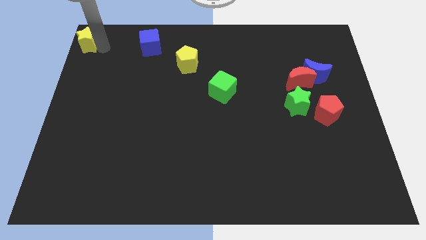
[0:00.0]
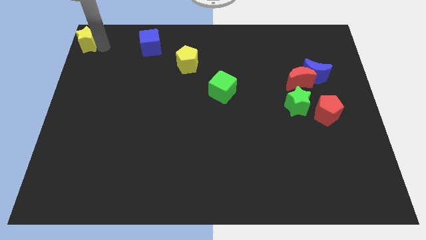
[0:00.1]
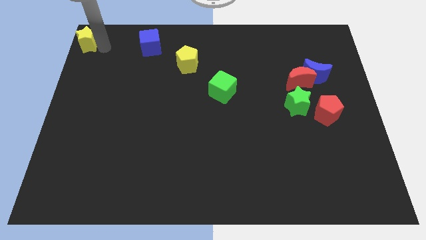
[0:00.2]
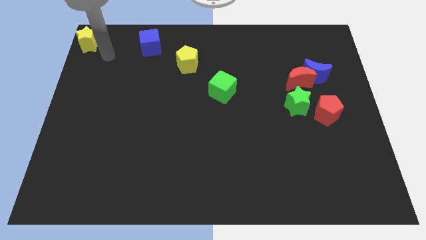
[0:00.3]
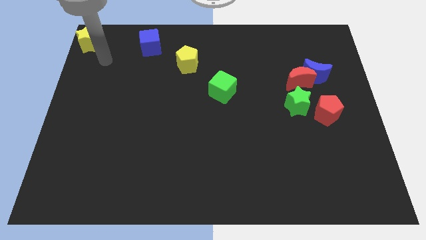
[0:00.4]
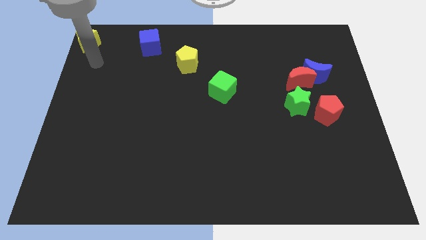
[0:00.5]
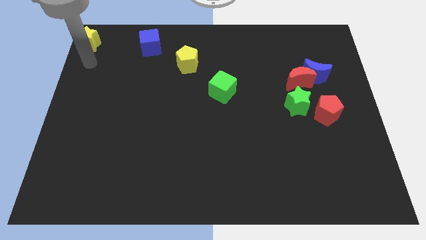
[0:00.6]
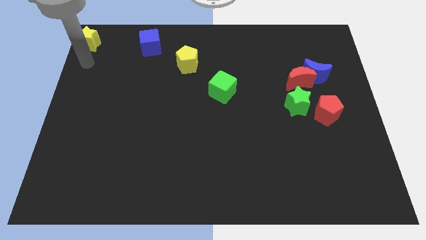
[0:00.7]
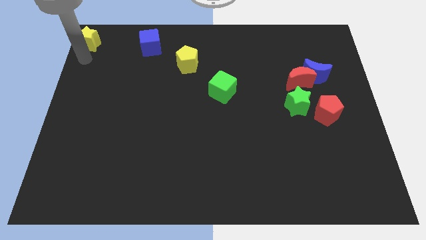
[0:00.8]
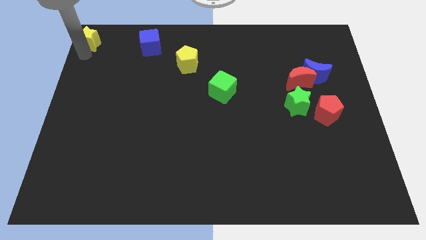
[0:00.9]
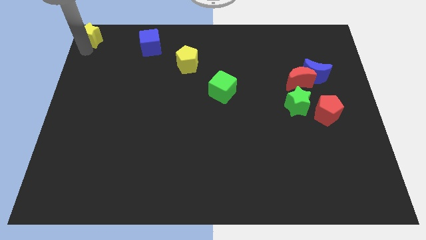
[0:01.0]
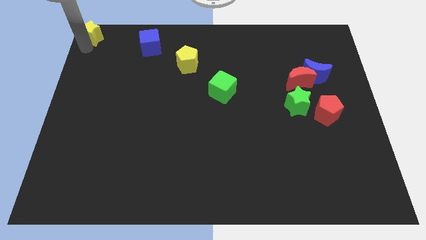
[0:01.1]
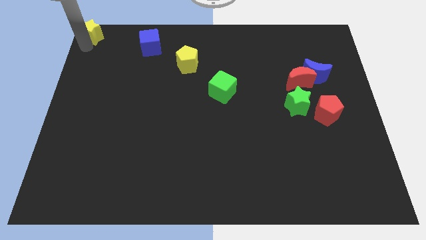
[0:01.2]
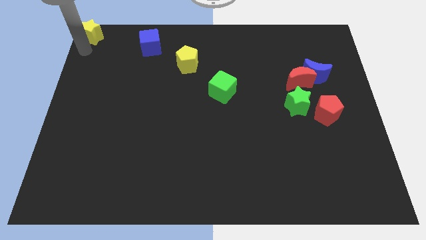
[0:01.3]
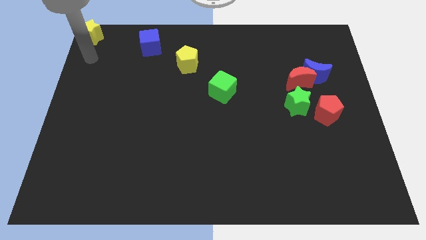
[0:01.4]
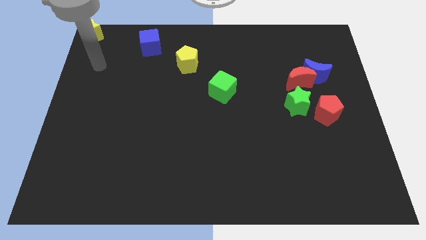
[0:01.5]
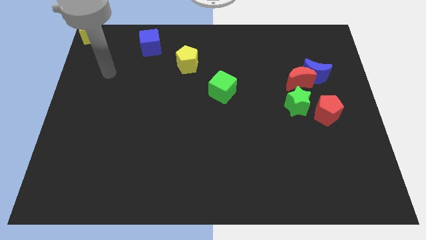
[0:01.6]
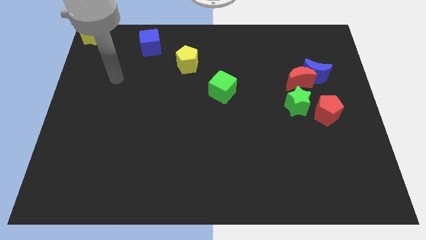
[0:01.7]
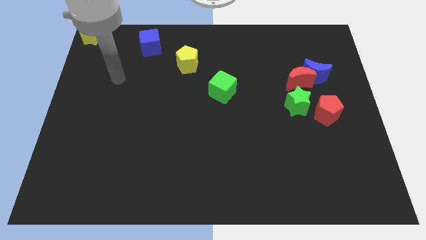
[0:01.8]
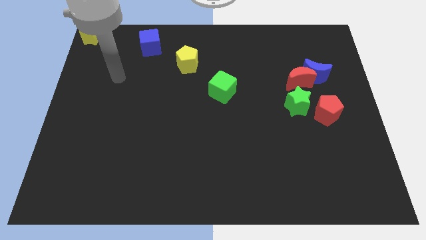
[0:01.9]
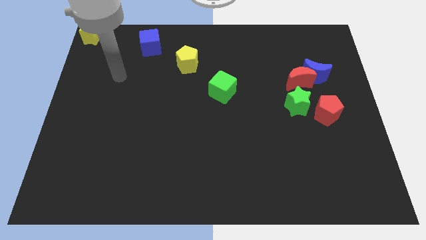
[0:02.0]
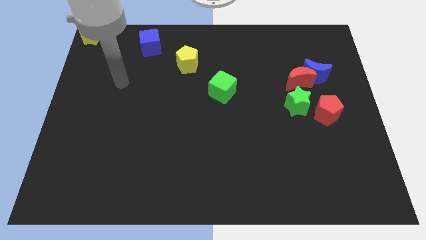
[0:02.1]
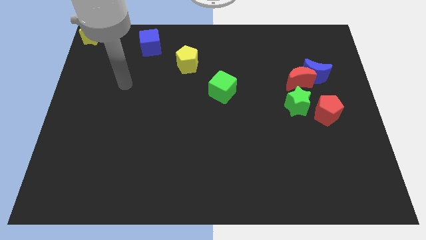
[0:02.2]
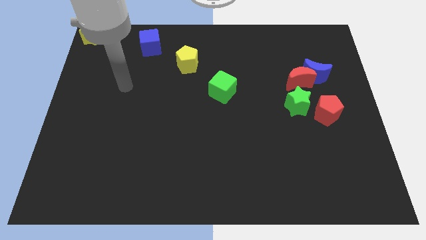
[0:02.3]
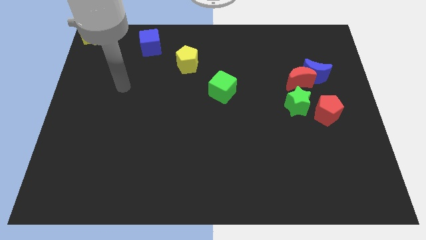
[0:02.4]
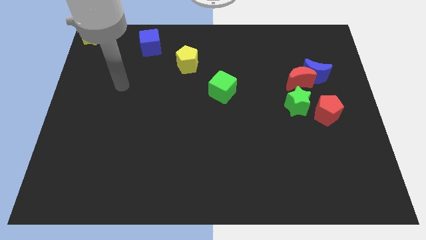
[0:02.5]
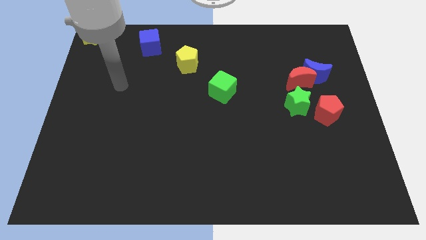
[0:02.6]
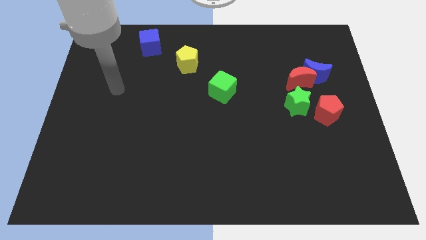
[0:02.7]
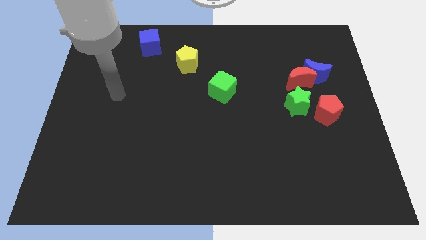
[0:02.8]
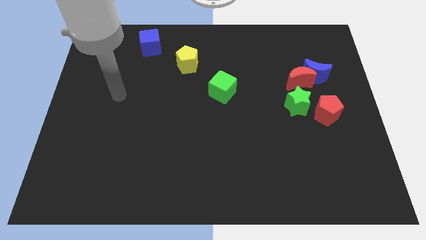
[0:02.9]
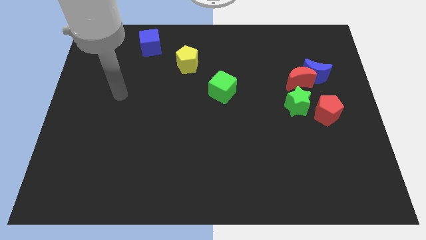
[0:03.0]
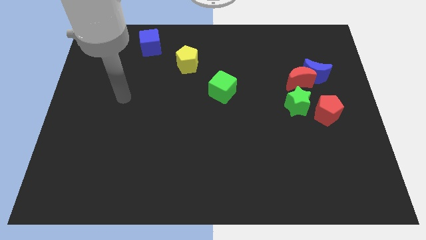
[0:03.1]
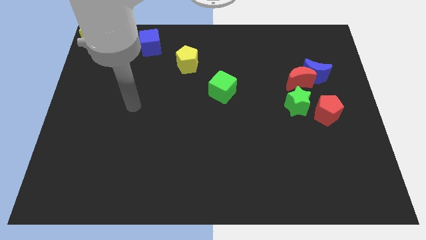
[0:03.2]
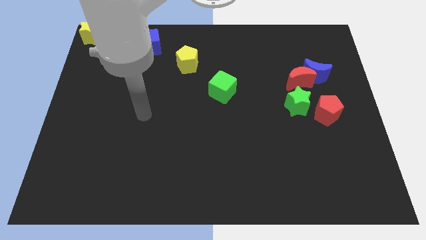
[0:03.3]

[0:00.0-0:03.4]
move your arm away from the yellow star

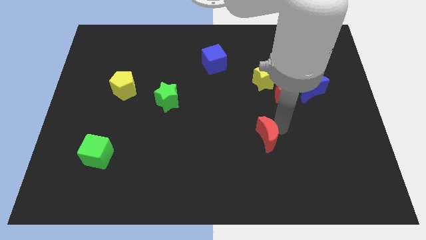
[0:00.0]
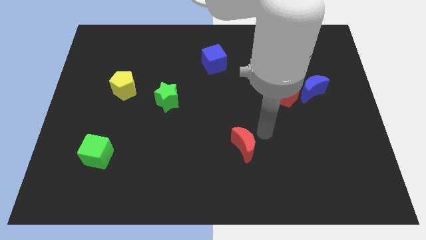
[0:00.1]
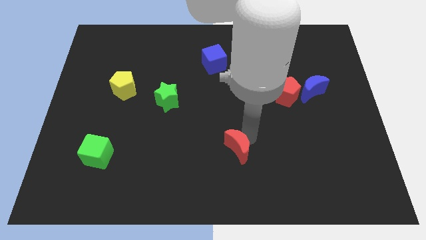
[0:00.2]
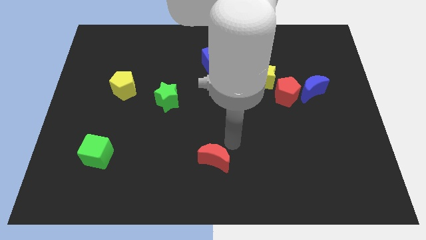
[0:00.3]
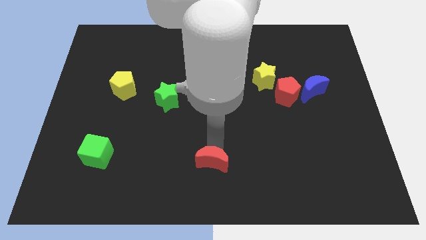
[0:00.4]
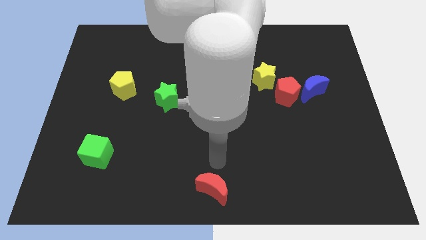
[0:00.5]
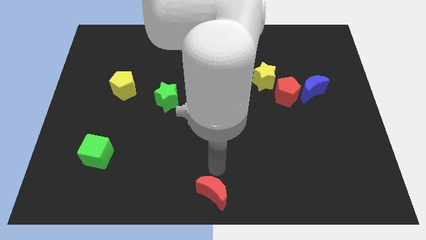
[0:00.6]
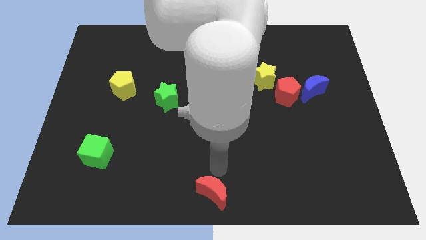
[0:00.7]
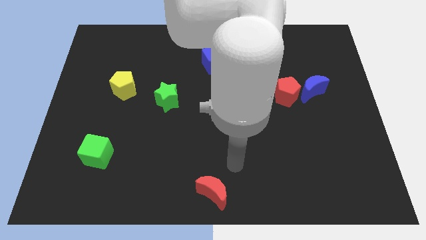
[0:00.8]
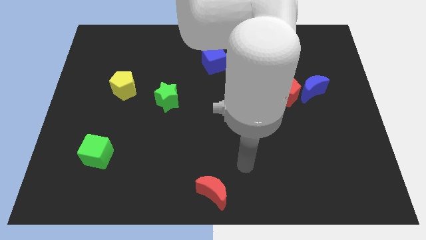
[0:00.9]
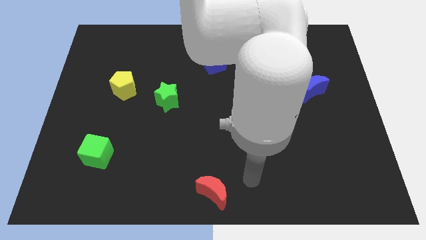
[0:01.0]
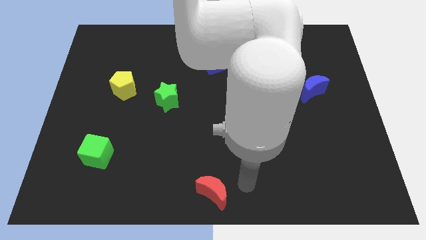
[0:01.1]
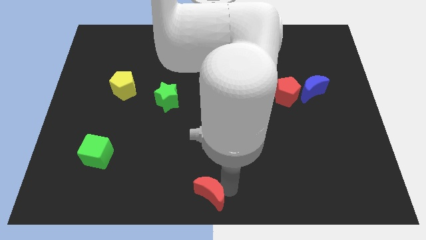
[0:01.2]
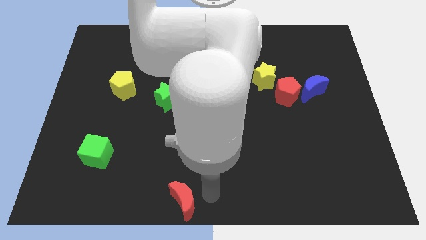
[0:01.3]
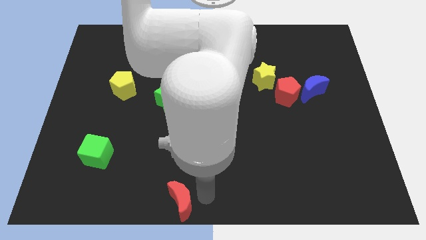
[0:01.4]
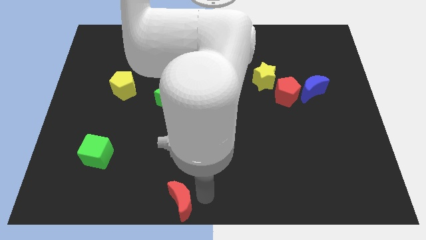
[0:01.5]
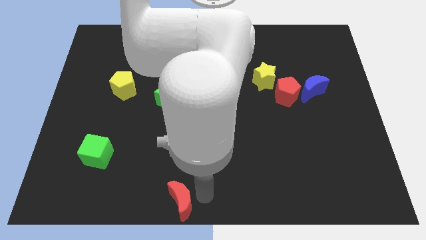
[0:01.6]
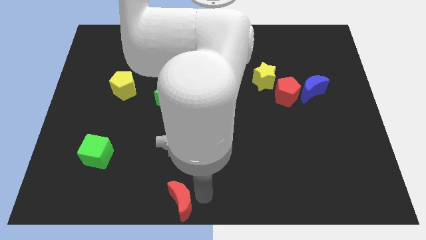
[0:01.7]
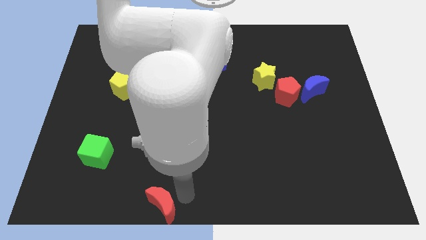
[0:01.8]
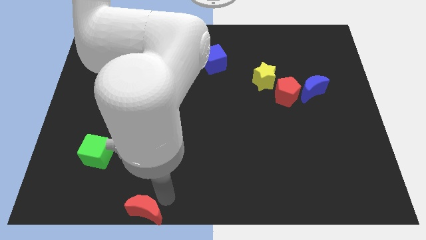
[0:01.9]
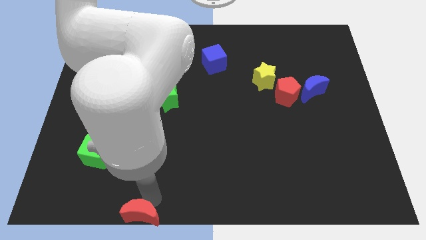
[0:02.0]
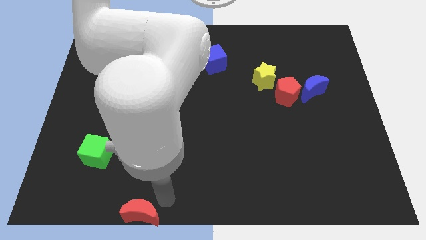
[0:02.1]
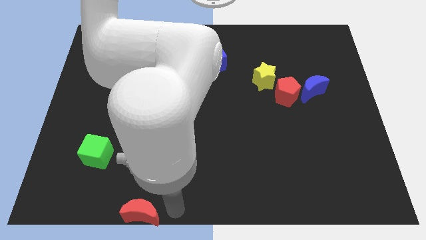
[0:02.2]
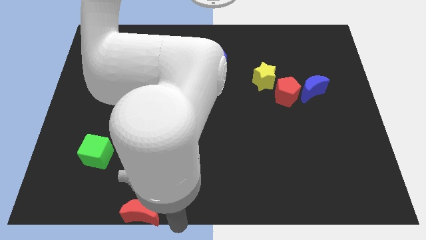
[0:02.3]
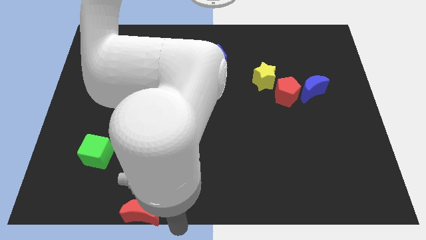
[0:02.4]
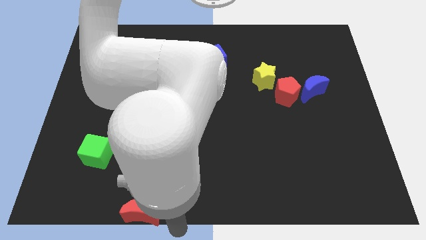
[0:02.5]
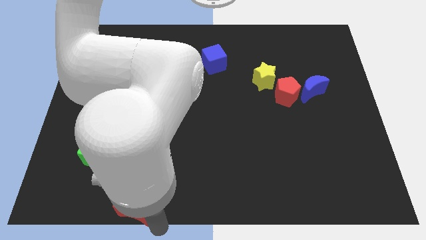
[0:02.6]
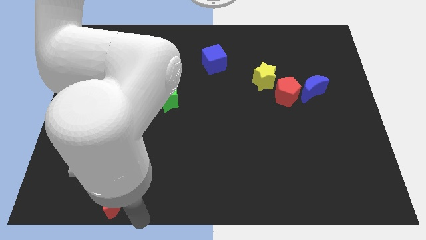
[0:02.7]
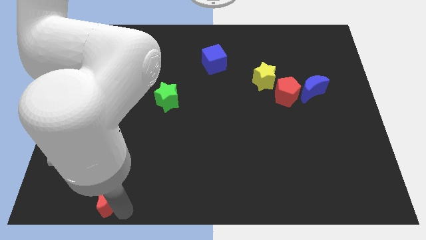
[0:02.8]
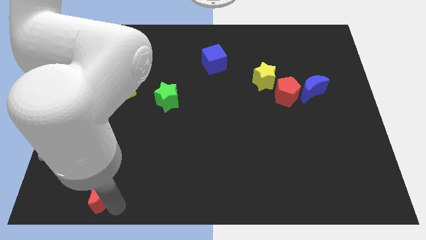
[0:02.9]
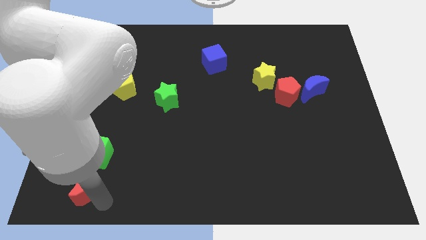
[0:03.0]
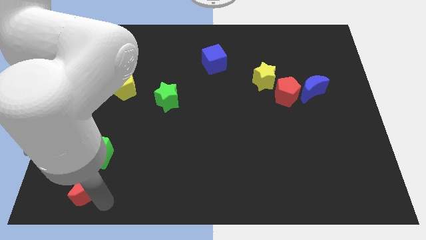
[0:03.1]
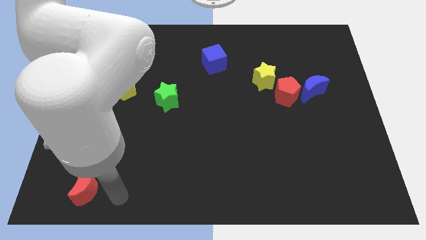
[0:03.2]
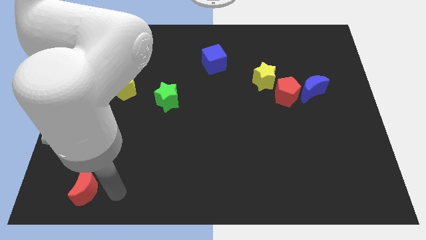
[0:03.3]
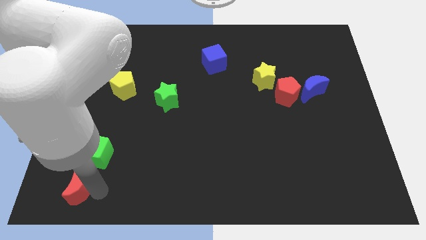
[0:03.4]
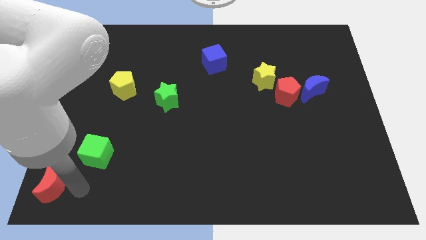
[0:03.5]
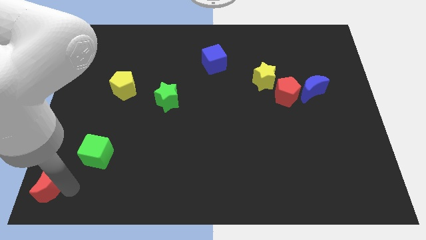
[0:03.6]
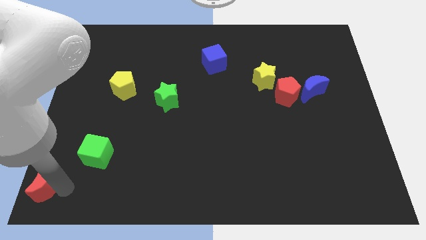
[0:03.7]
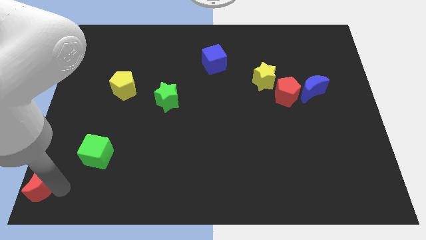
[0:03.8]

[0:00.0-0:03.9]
push the red moon to the bottom left side of the board

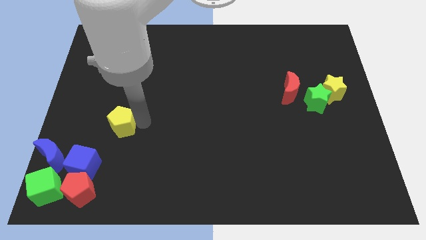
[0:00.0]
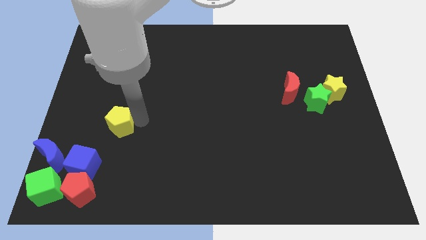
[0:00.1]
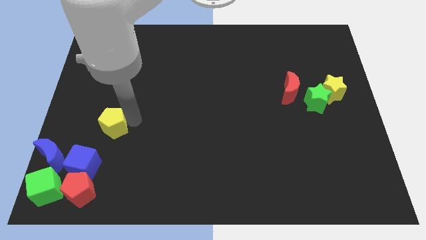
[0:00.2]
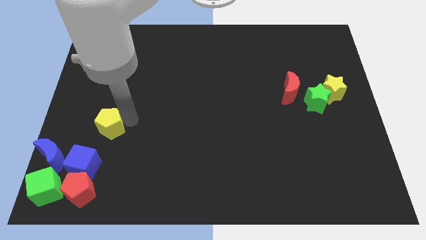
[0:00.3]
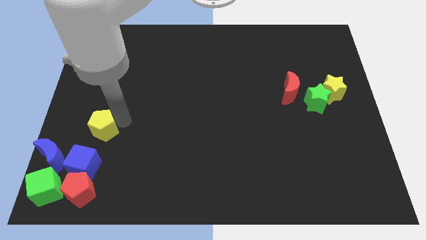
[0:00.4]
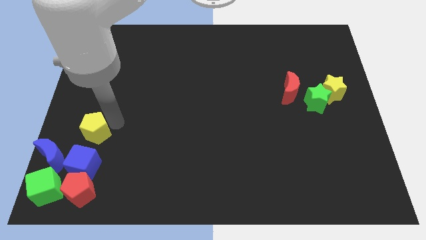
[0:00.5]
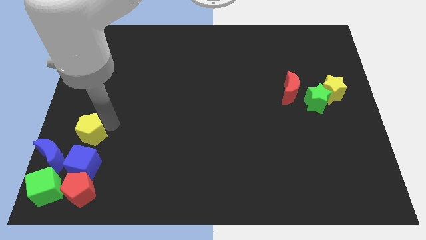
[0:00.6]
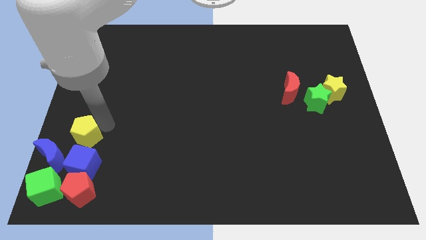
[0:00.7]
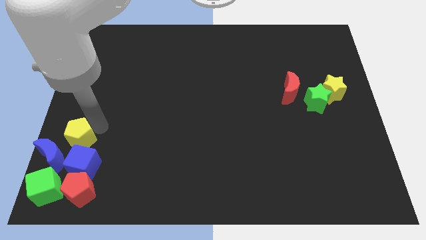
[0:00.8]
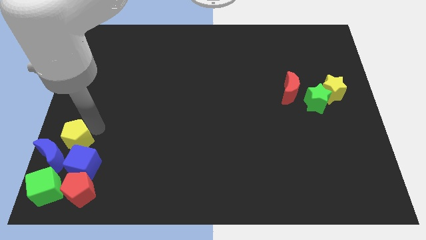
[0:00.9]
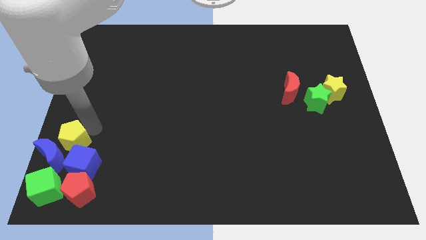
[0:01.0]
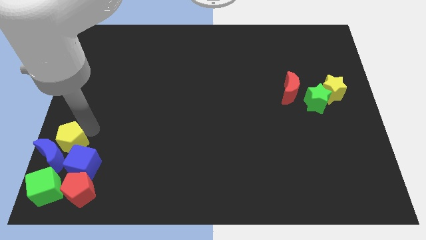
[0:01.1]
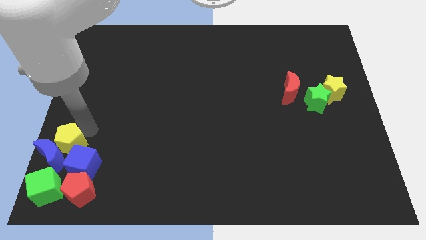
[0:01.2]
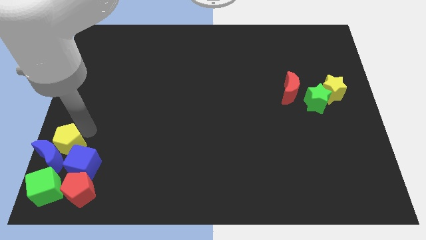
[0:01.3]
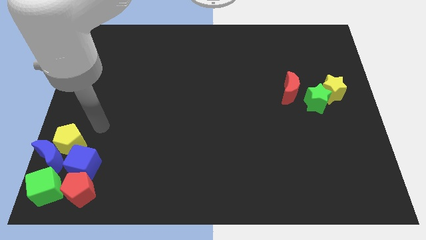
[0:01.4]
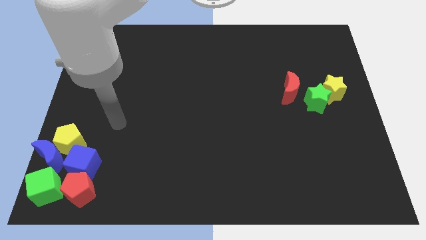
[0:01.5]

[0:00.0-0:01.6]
push the yellow pentagon into the blue blocks

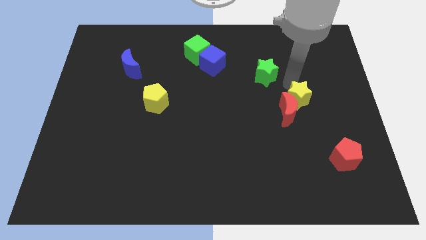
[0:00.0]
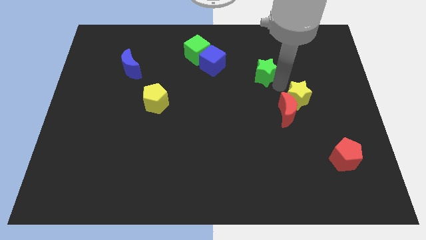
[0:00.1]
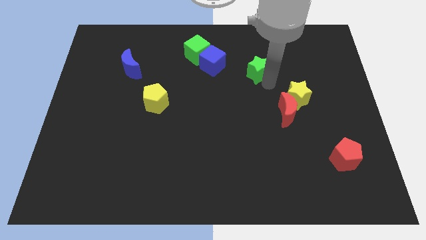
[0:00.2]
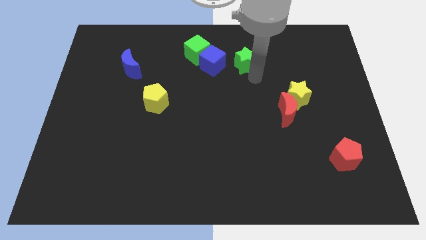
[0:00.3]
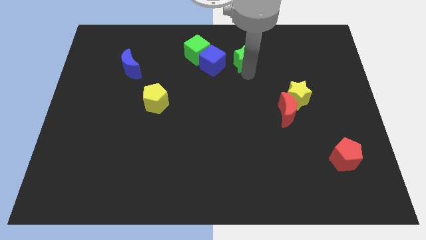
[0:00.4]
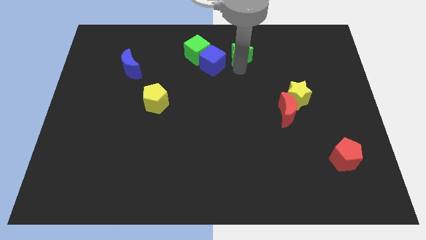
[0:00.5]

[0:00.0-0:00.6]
move the green star close to the blue cube
